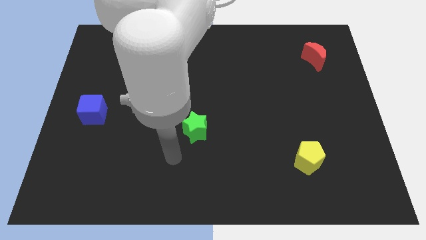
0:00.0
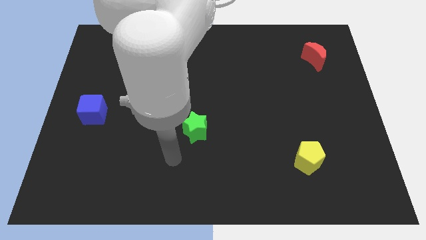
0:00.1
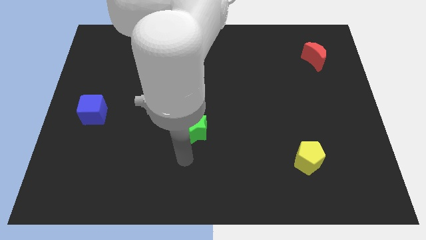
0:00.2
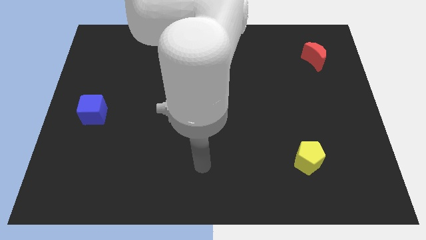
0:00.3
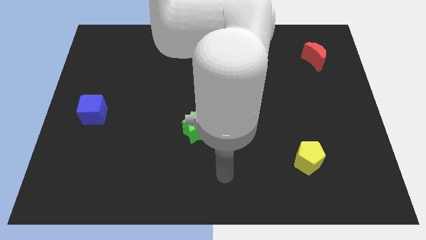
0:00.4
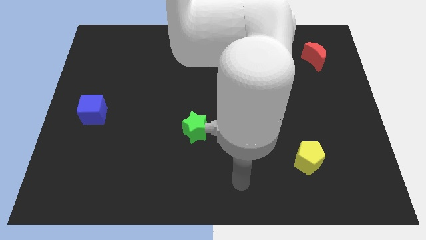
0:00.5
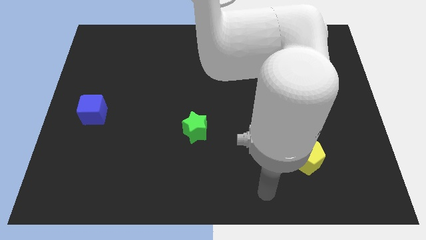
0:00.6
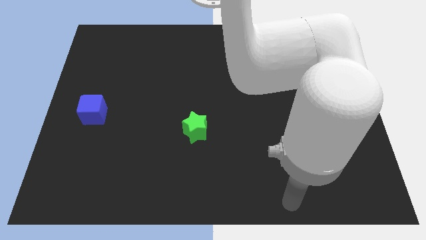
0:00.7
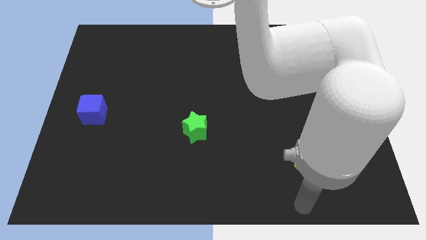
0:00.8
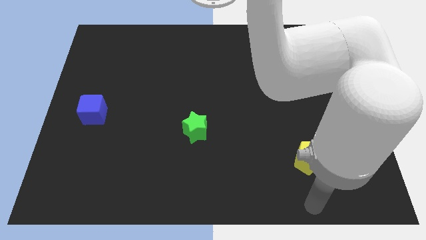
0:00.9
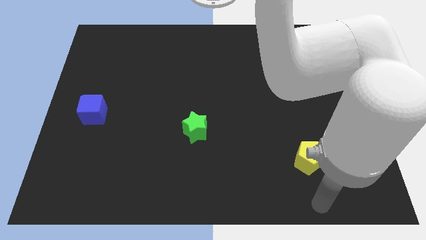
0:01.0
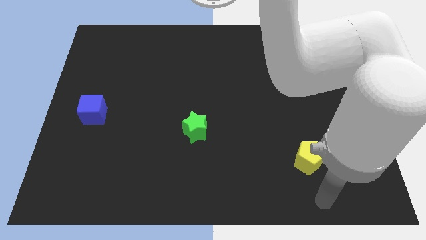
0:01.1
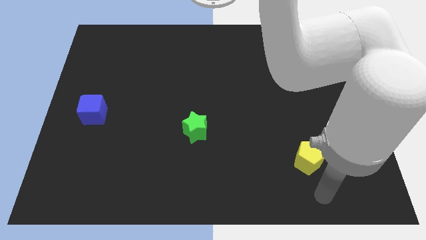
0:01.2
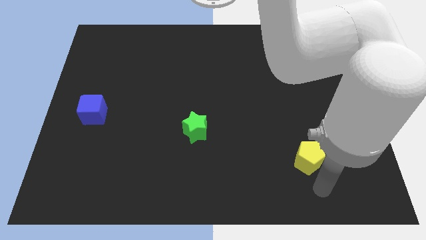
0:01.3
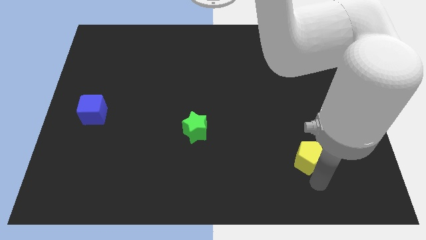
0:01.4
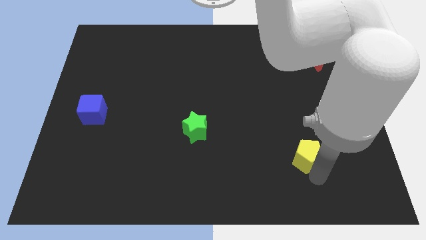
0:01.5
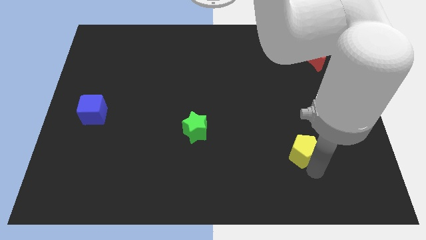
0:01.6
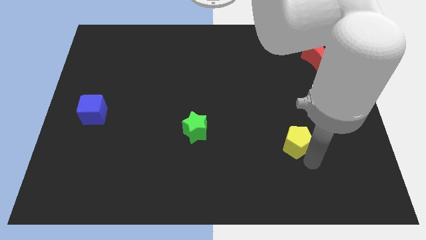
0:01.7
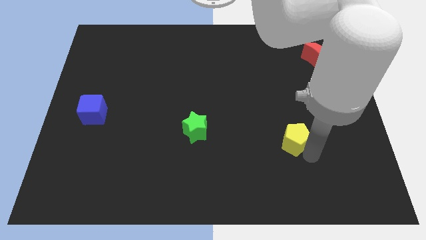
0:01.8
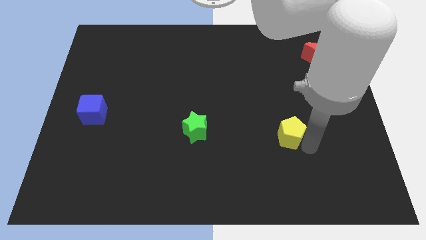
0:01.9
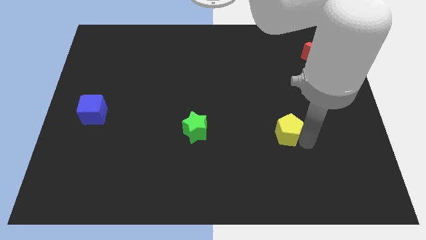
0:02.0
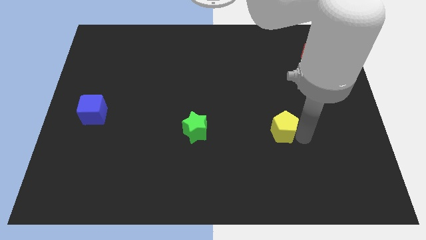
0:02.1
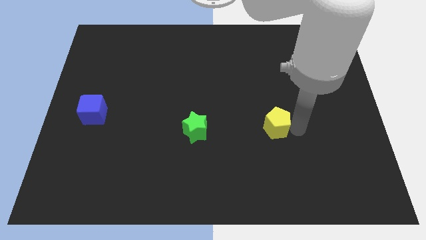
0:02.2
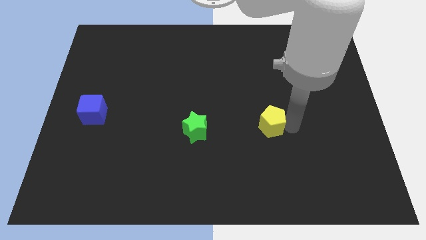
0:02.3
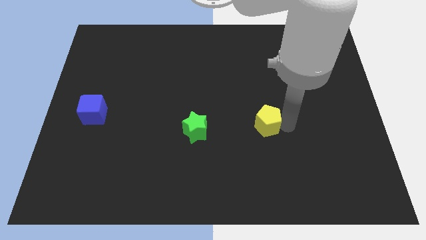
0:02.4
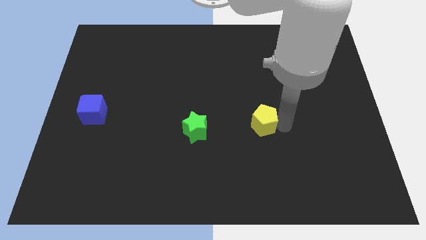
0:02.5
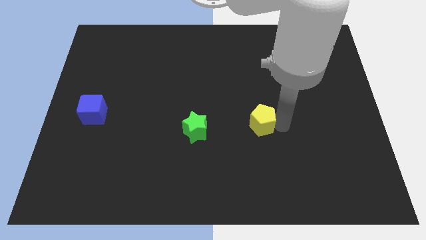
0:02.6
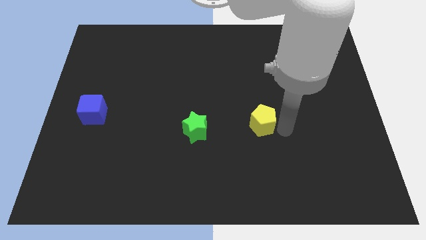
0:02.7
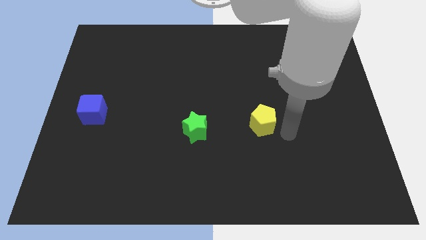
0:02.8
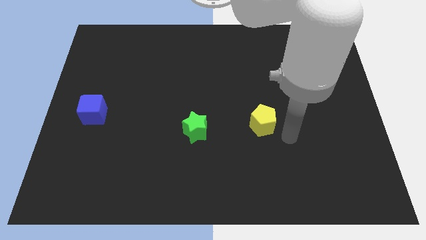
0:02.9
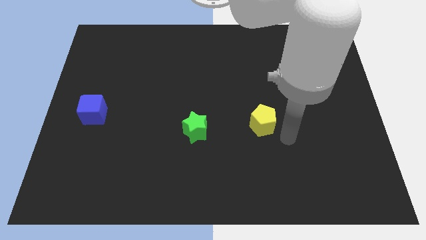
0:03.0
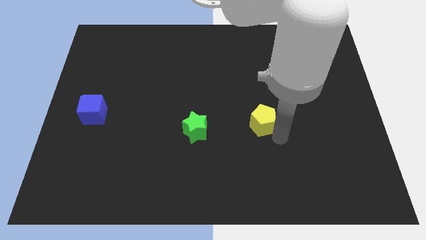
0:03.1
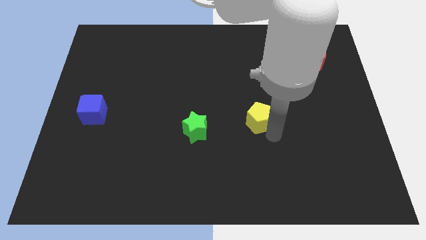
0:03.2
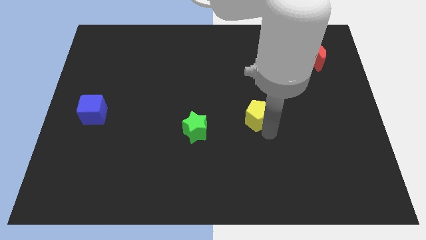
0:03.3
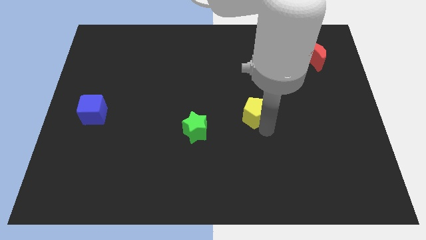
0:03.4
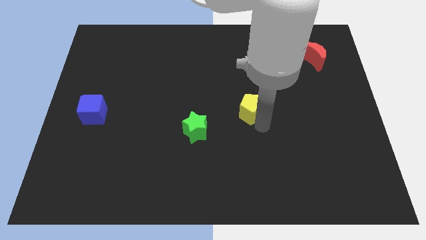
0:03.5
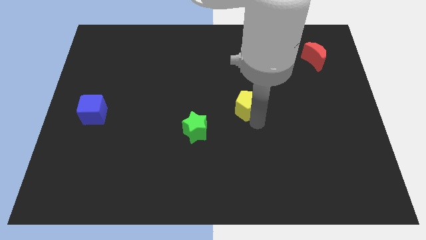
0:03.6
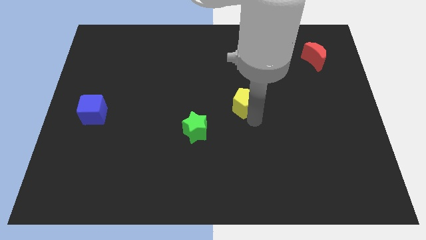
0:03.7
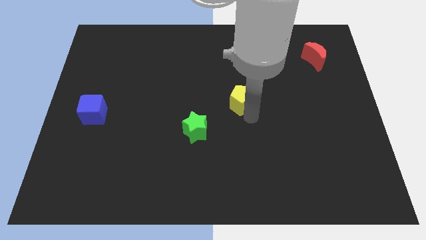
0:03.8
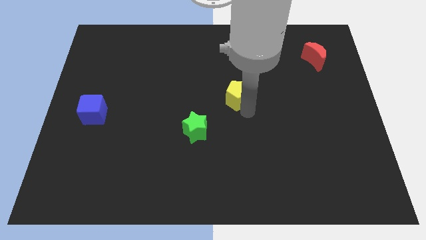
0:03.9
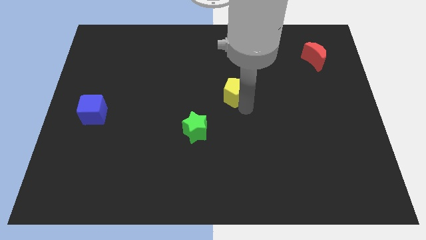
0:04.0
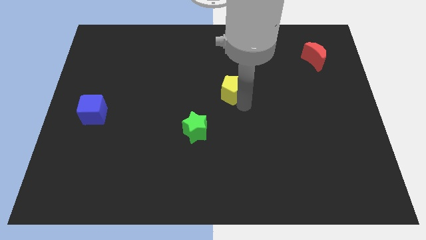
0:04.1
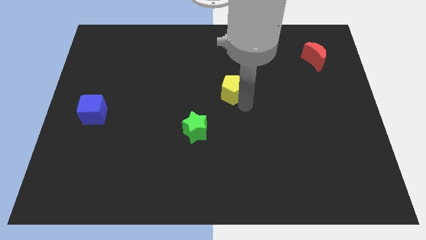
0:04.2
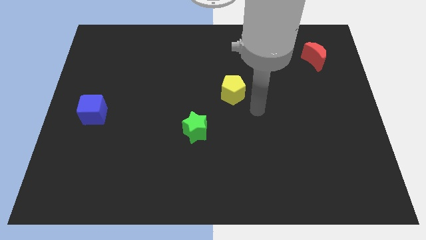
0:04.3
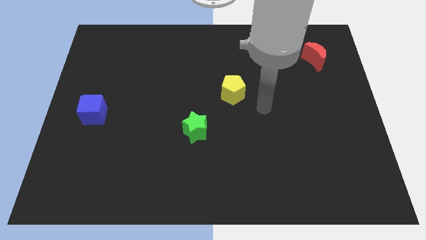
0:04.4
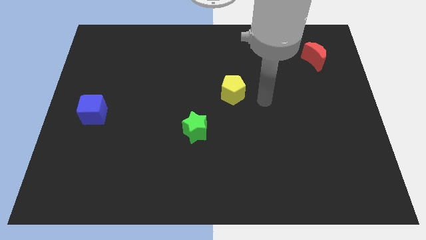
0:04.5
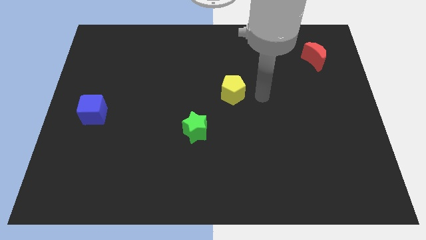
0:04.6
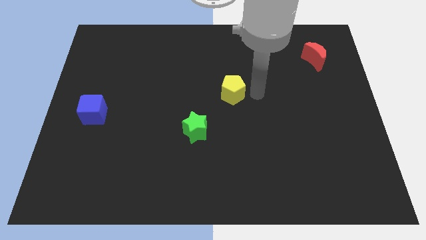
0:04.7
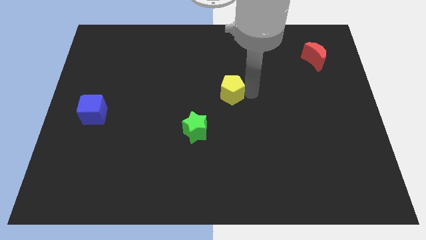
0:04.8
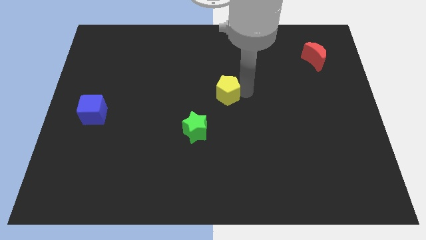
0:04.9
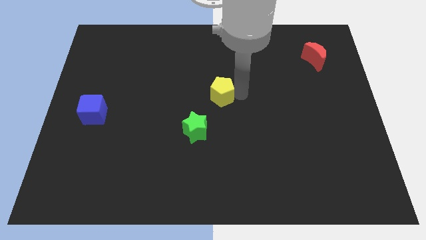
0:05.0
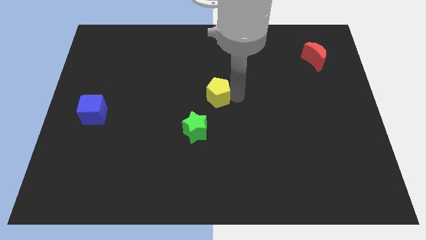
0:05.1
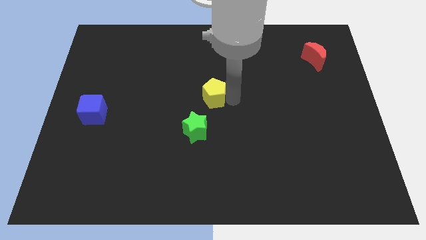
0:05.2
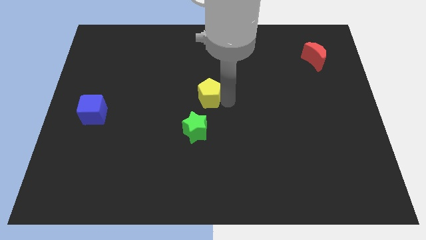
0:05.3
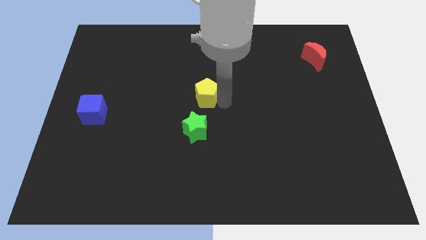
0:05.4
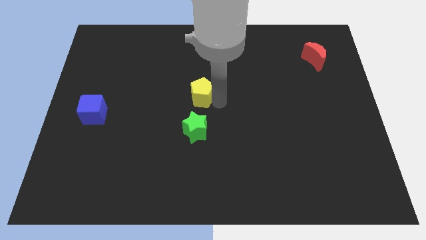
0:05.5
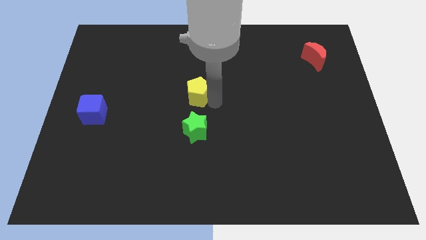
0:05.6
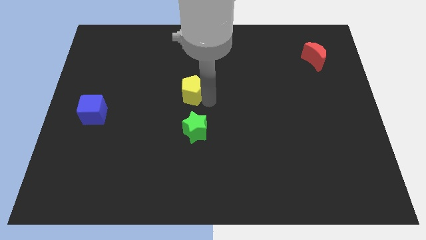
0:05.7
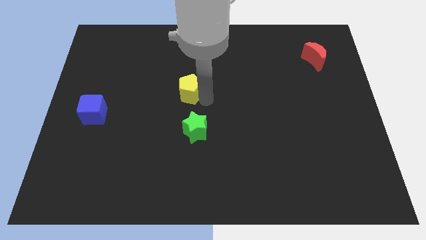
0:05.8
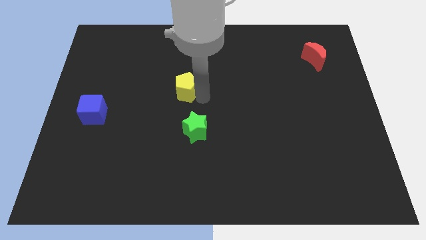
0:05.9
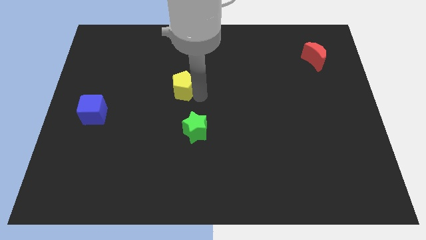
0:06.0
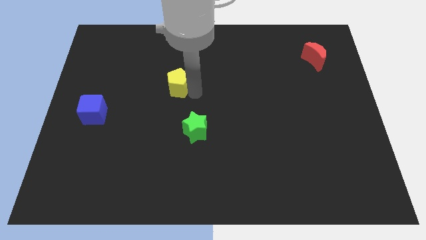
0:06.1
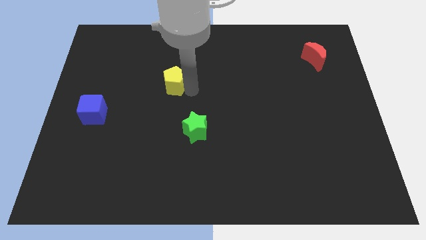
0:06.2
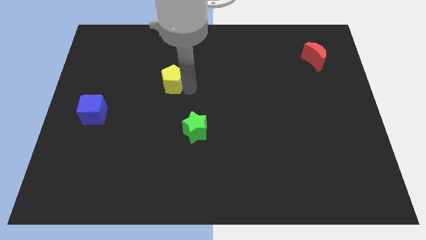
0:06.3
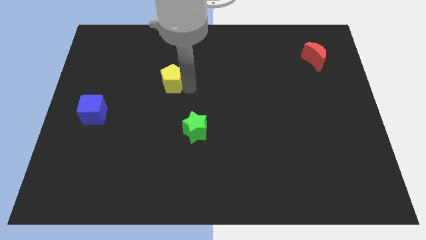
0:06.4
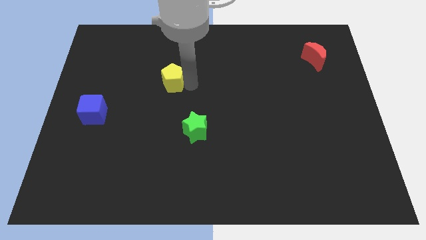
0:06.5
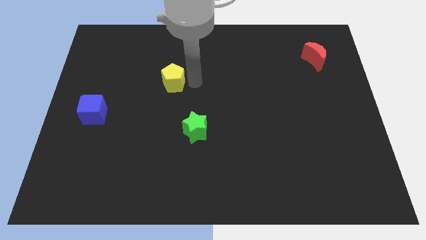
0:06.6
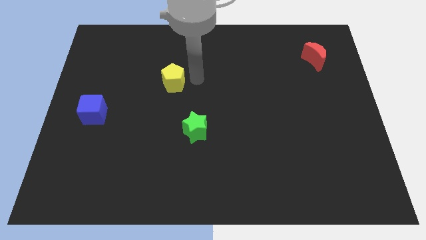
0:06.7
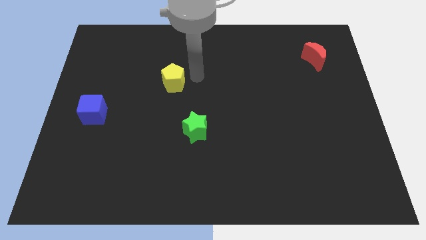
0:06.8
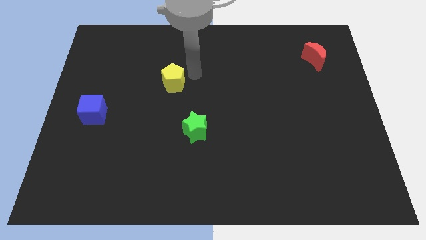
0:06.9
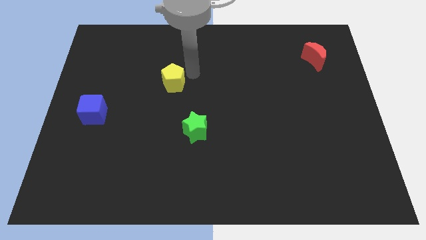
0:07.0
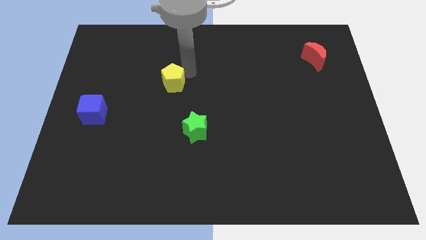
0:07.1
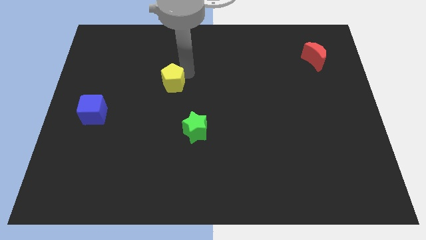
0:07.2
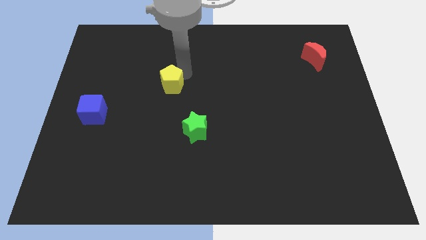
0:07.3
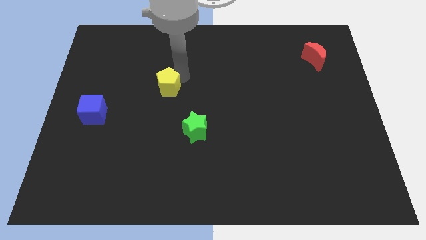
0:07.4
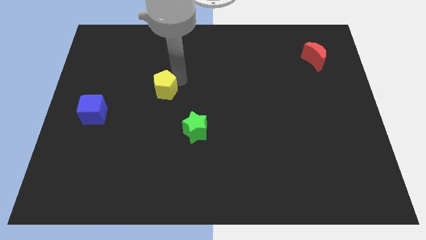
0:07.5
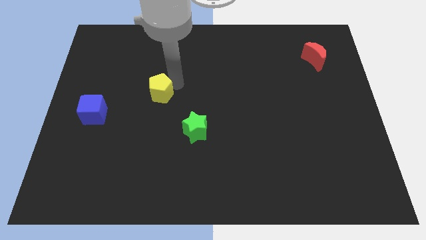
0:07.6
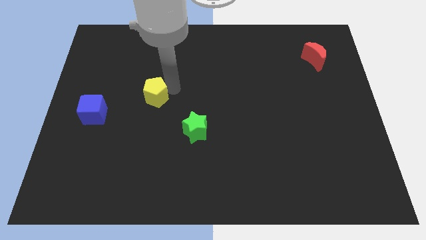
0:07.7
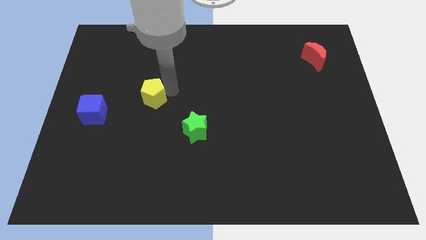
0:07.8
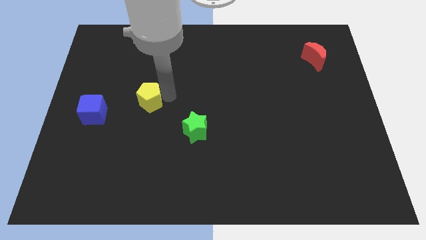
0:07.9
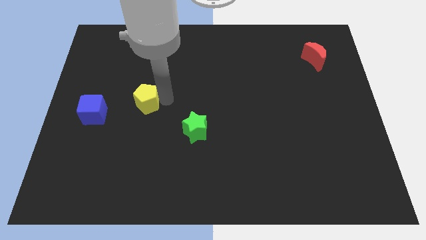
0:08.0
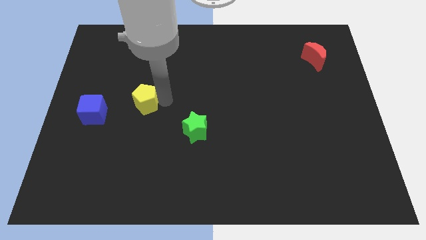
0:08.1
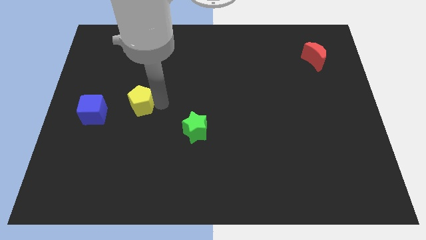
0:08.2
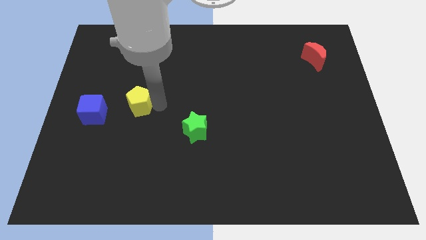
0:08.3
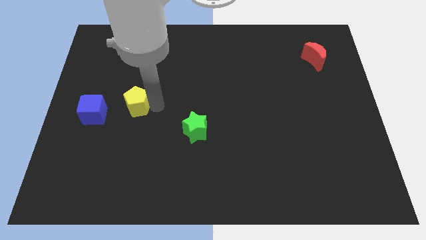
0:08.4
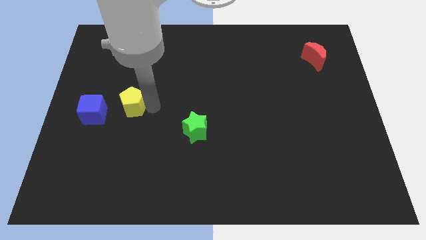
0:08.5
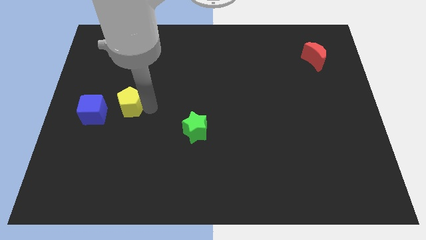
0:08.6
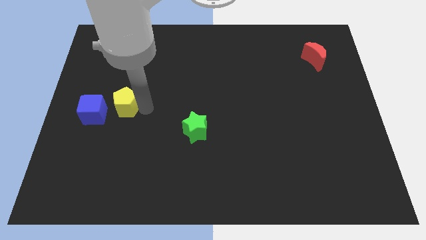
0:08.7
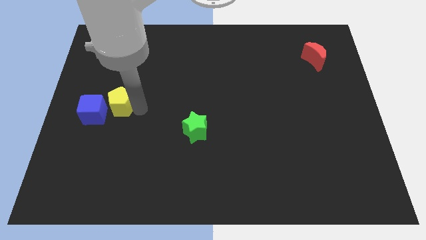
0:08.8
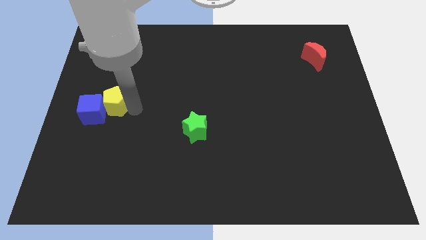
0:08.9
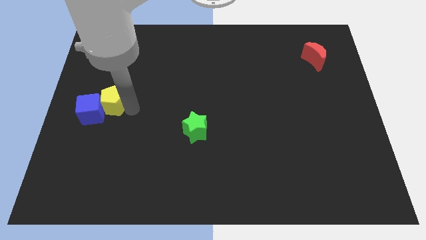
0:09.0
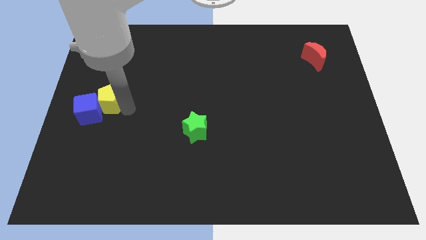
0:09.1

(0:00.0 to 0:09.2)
move the yellow pentagon close to the blue block
